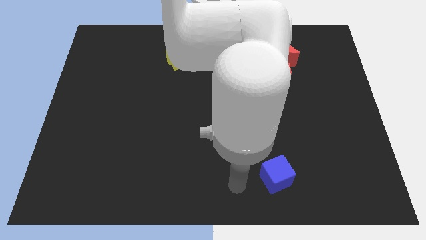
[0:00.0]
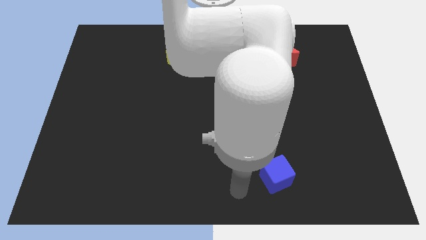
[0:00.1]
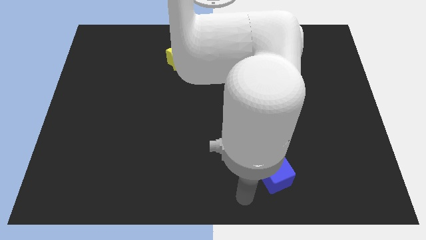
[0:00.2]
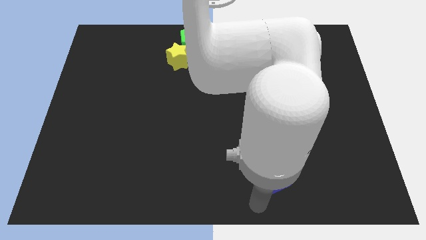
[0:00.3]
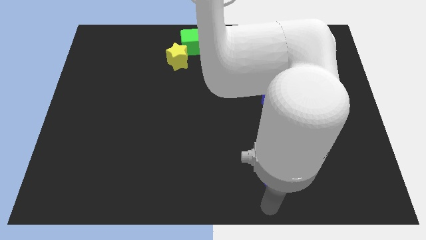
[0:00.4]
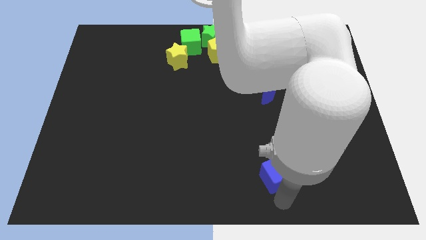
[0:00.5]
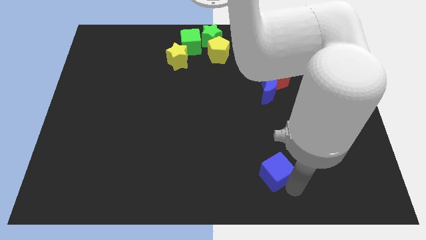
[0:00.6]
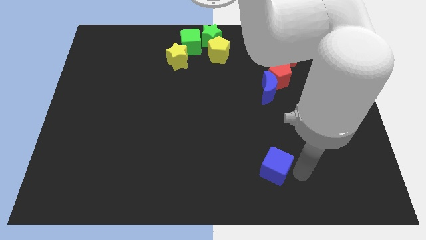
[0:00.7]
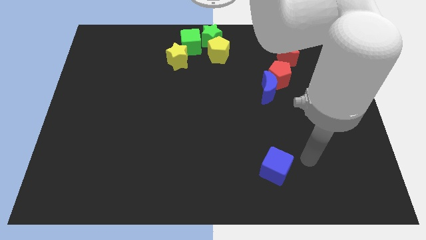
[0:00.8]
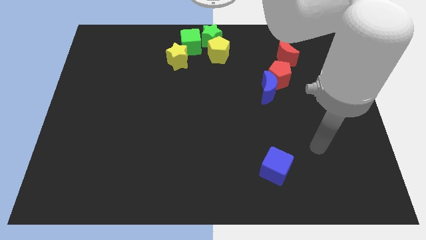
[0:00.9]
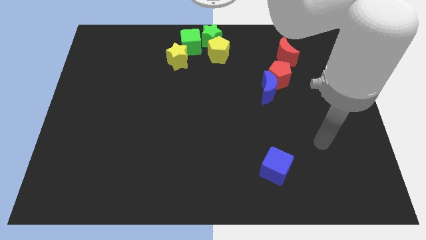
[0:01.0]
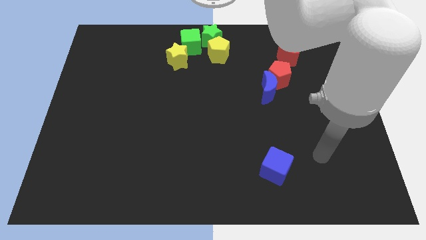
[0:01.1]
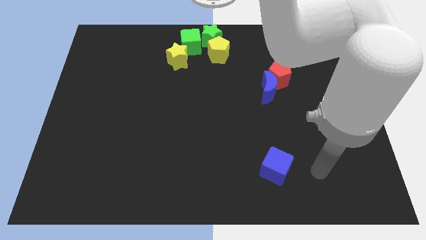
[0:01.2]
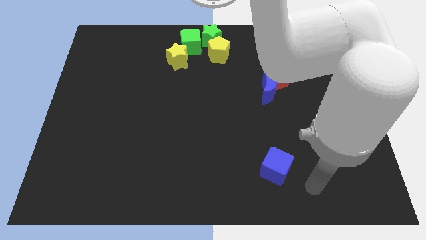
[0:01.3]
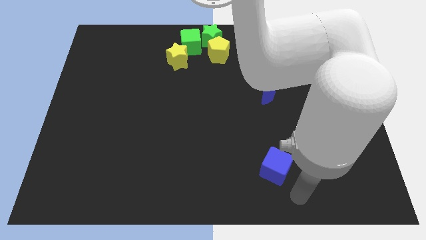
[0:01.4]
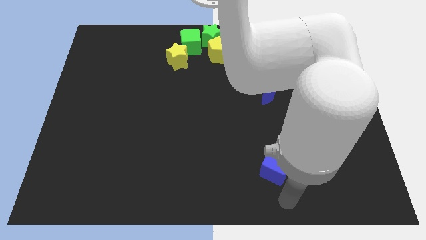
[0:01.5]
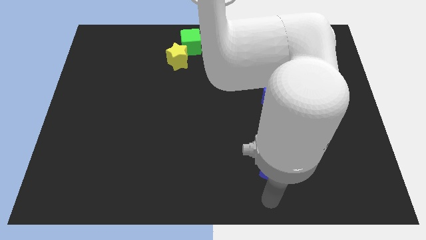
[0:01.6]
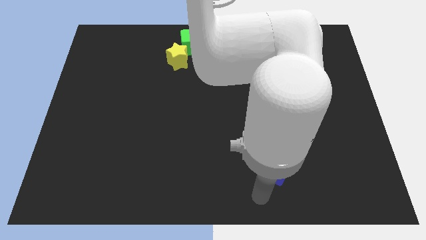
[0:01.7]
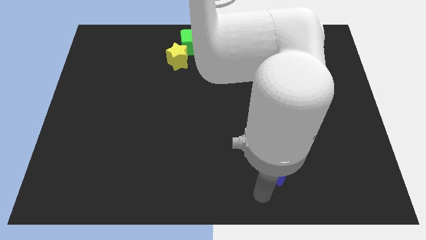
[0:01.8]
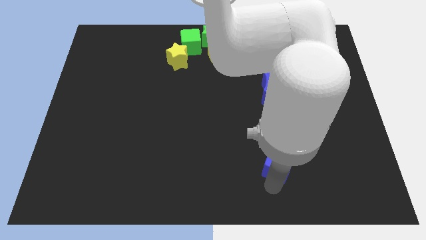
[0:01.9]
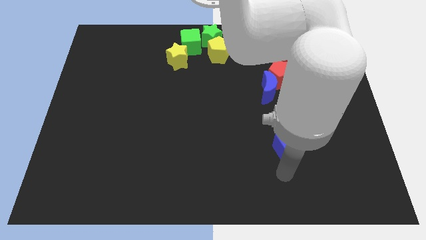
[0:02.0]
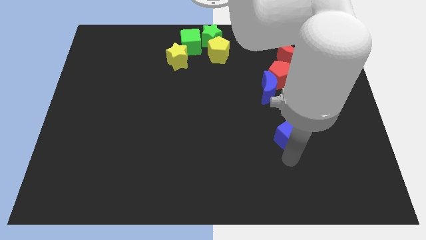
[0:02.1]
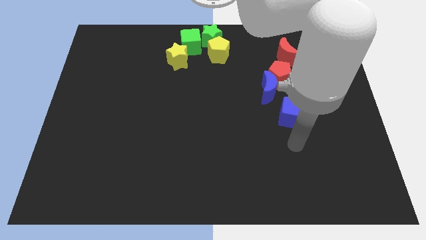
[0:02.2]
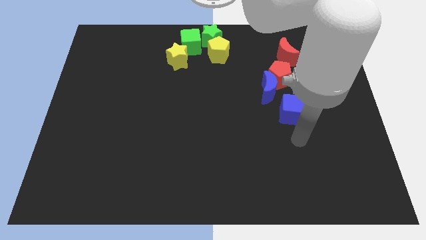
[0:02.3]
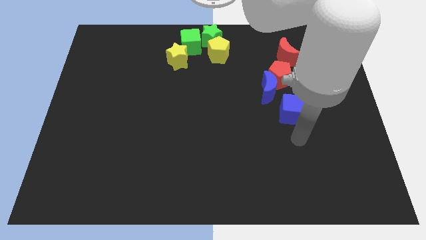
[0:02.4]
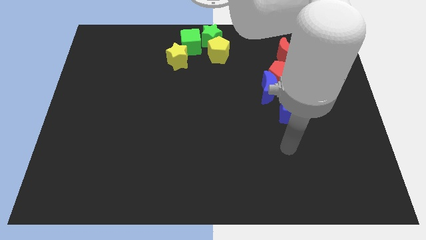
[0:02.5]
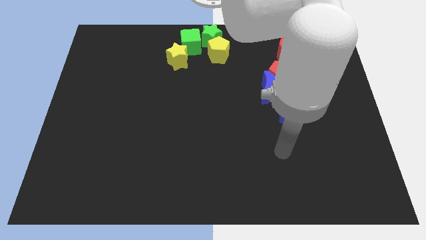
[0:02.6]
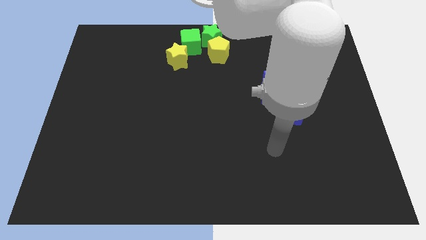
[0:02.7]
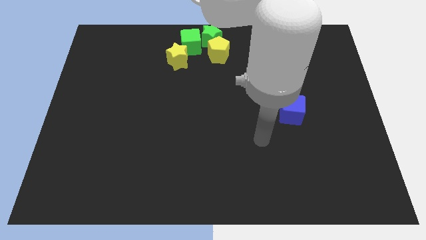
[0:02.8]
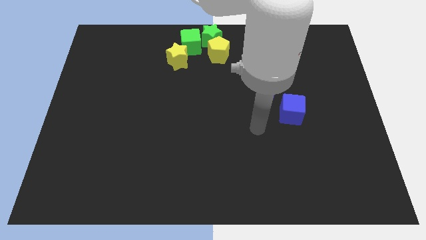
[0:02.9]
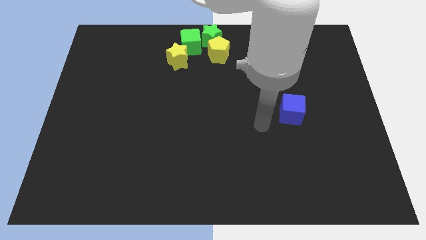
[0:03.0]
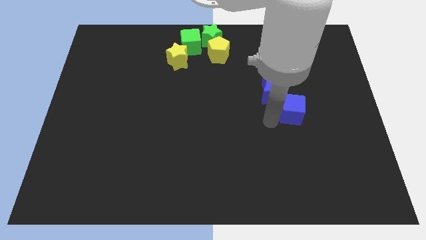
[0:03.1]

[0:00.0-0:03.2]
move the blue cube to the bottom of the red pentagon

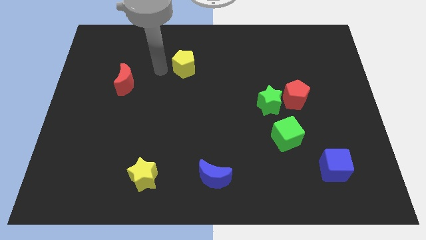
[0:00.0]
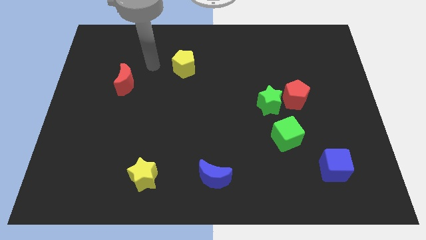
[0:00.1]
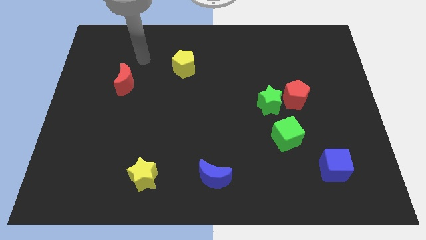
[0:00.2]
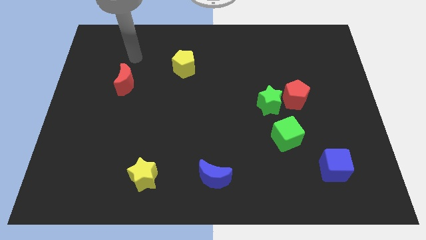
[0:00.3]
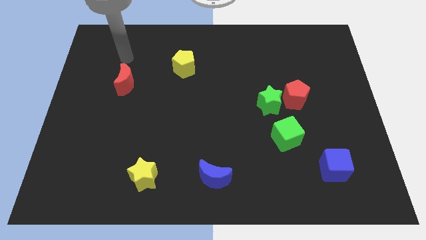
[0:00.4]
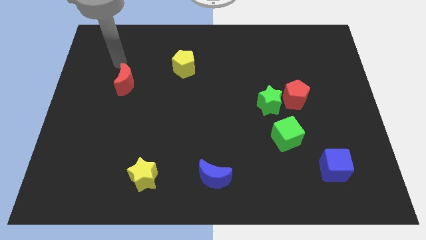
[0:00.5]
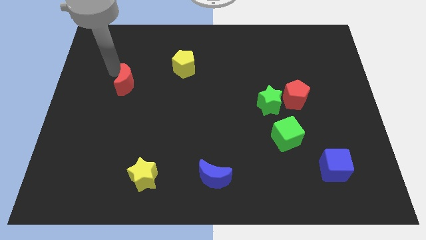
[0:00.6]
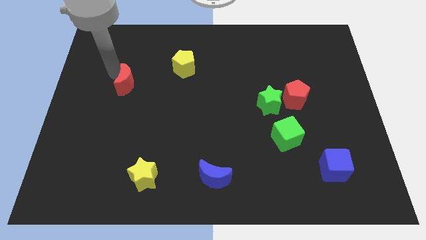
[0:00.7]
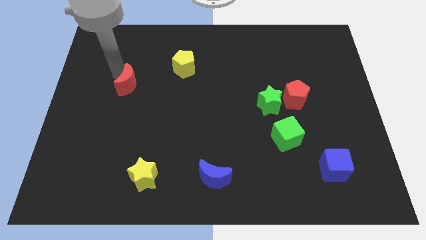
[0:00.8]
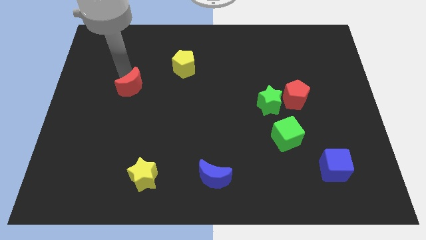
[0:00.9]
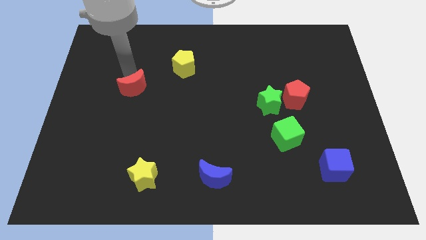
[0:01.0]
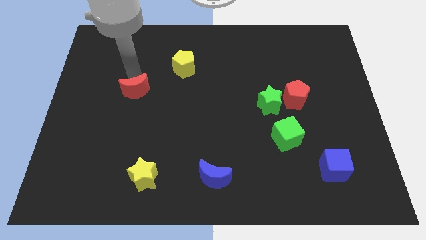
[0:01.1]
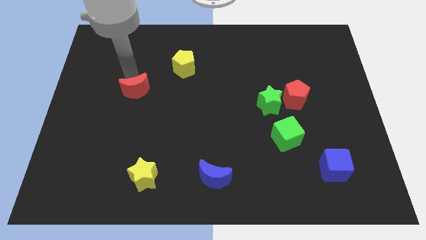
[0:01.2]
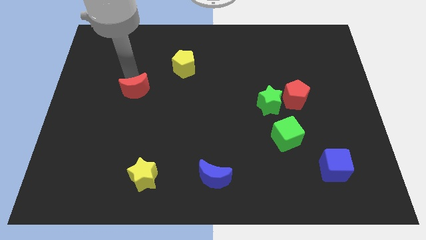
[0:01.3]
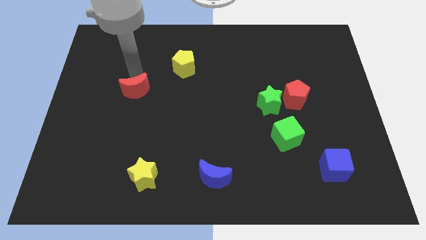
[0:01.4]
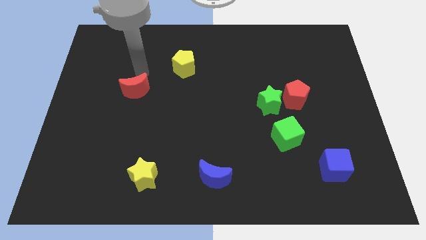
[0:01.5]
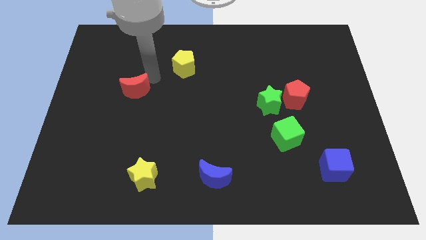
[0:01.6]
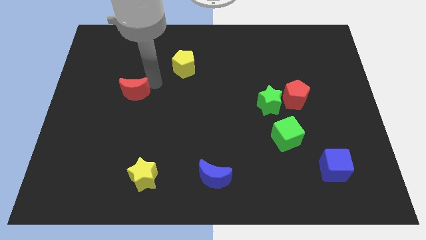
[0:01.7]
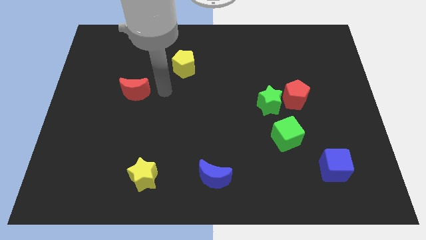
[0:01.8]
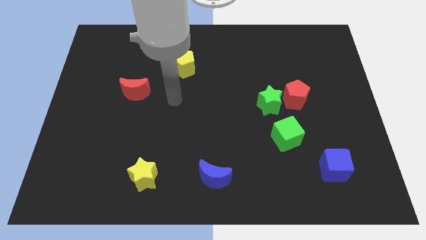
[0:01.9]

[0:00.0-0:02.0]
slightly push the red moon down

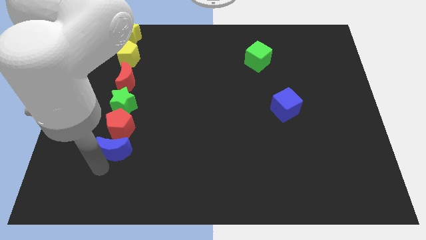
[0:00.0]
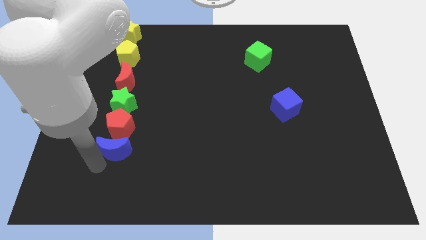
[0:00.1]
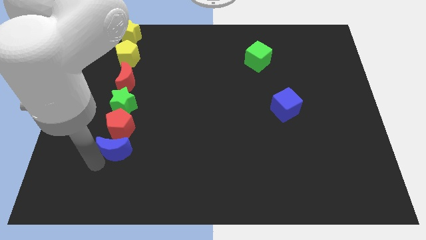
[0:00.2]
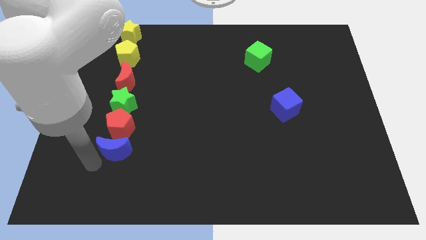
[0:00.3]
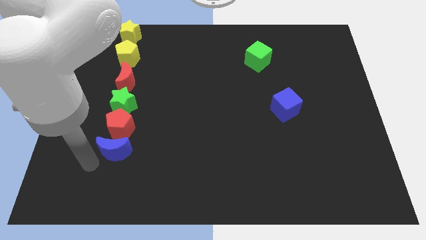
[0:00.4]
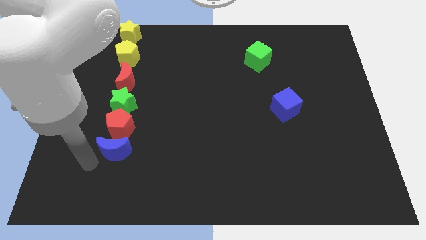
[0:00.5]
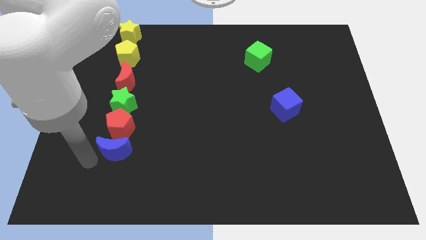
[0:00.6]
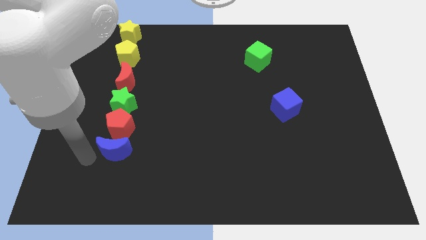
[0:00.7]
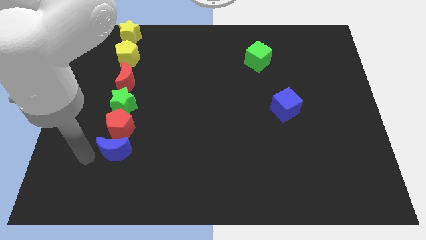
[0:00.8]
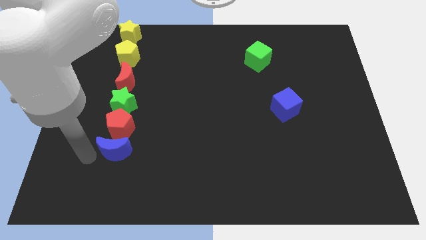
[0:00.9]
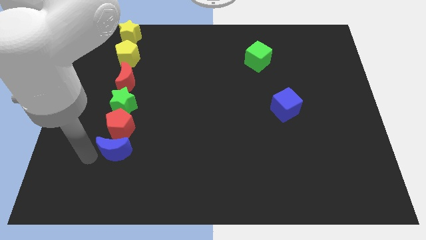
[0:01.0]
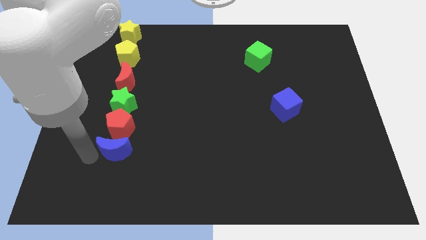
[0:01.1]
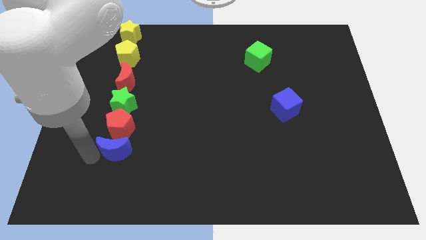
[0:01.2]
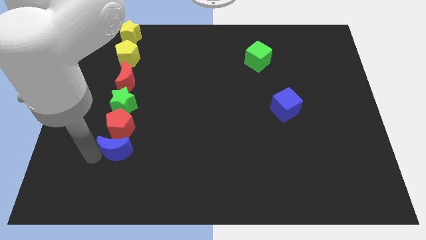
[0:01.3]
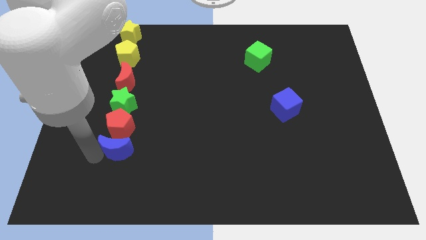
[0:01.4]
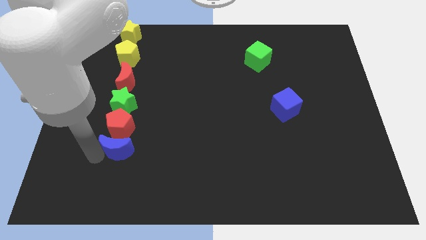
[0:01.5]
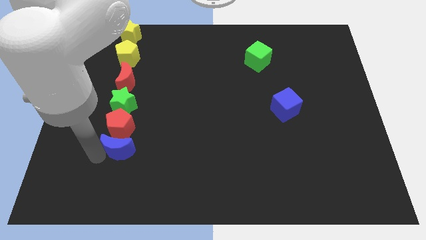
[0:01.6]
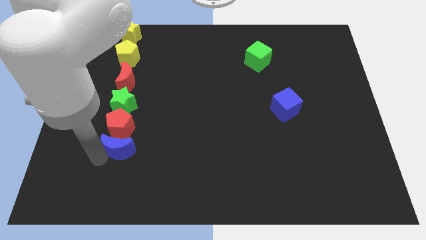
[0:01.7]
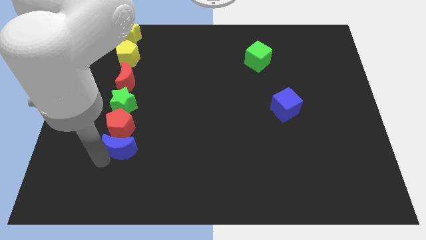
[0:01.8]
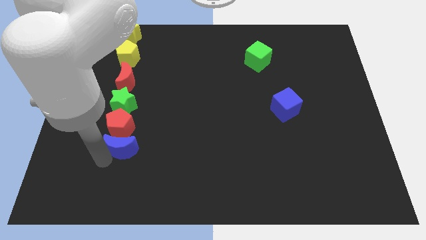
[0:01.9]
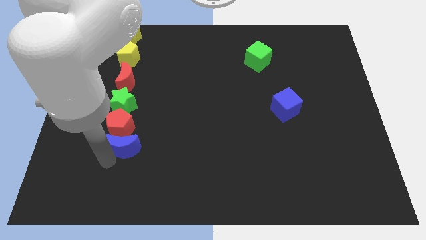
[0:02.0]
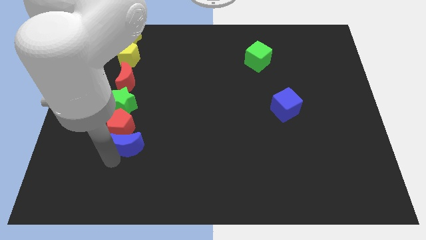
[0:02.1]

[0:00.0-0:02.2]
slide blue moon below red pentagon

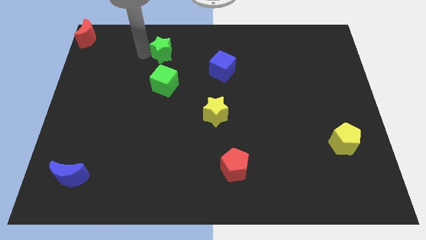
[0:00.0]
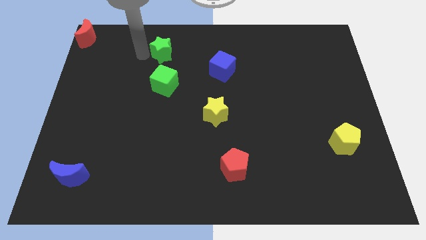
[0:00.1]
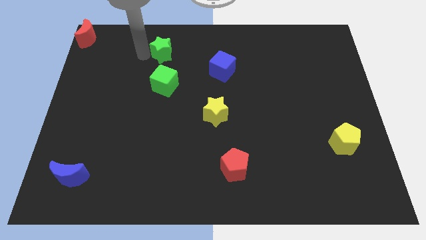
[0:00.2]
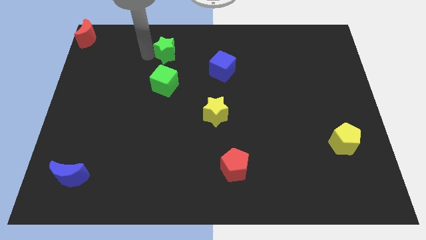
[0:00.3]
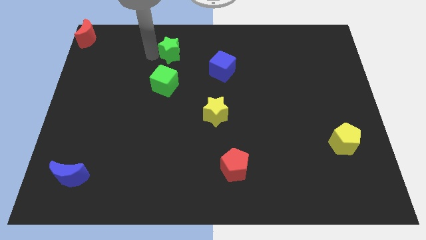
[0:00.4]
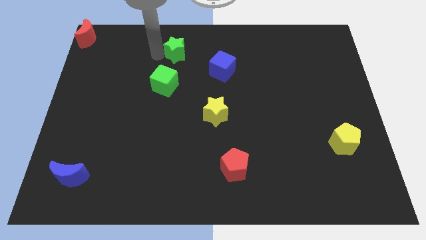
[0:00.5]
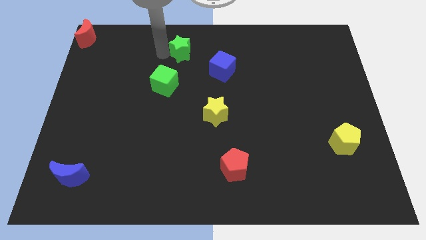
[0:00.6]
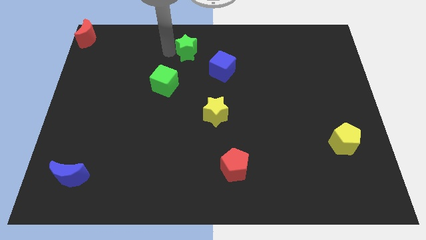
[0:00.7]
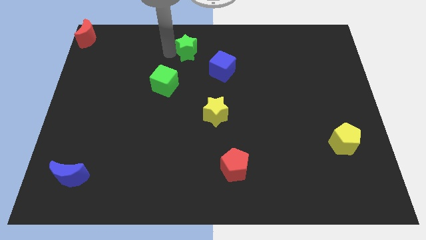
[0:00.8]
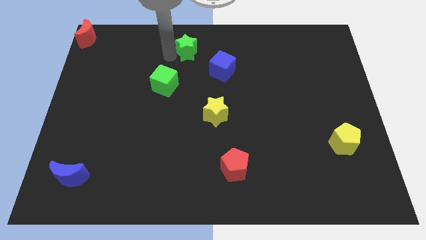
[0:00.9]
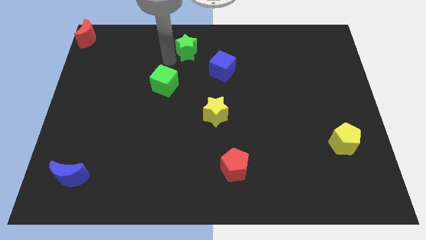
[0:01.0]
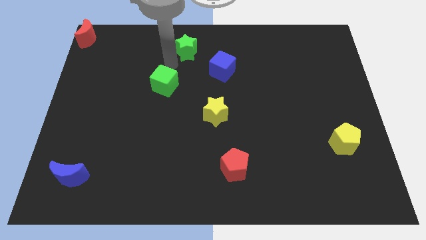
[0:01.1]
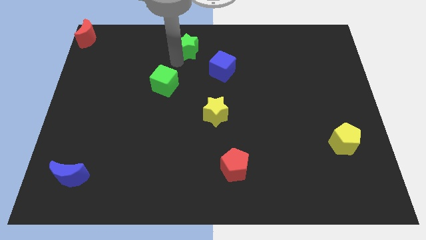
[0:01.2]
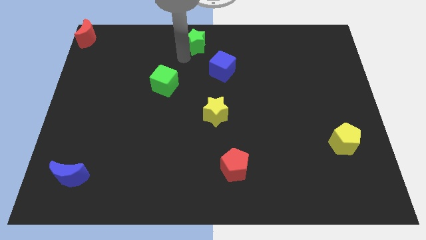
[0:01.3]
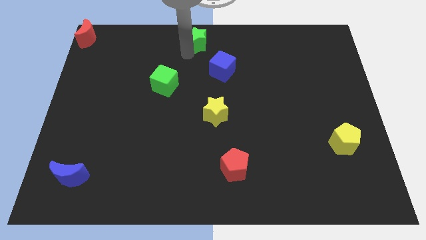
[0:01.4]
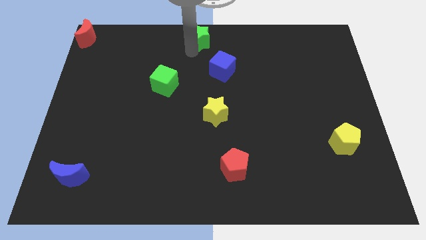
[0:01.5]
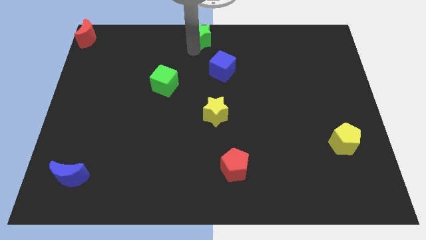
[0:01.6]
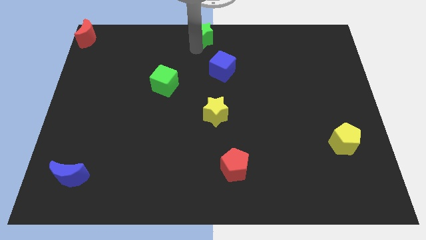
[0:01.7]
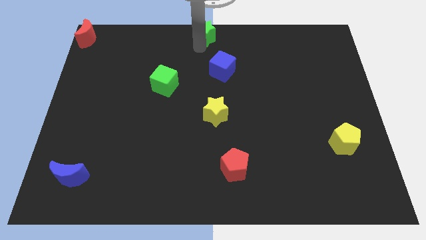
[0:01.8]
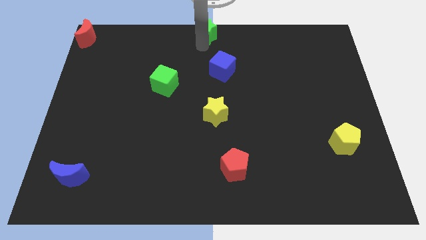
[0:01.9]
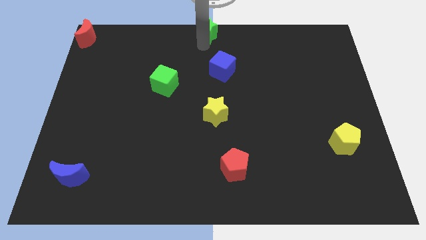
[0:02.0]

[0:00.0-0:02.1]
move the green star to the top center of the board
